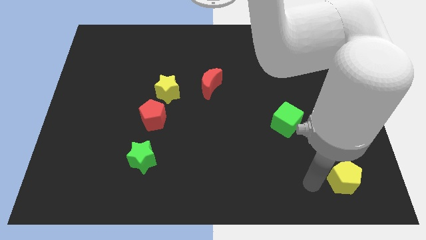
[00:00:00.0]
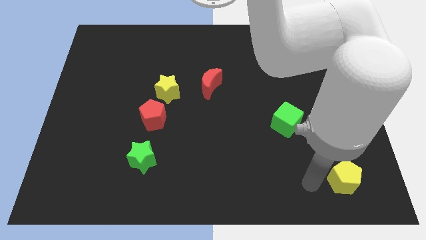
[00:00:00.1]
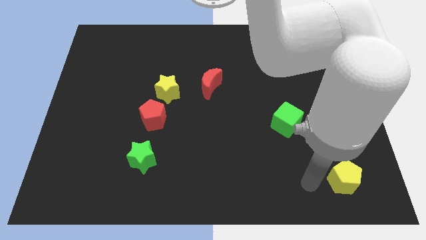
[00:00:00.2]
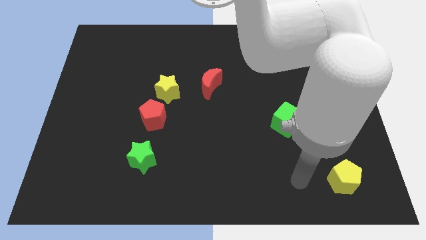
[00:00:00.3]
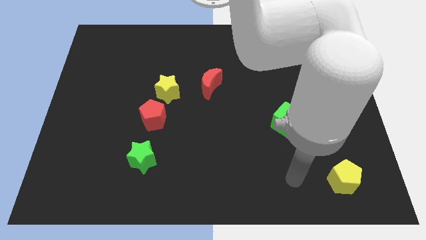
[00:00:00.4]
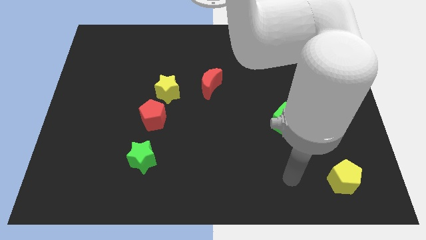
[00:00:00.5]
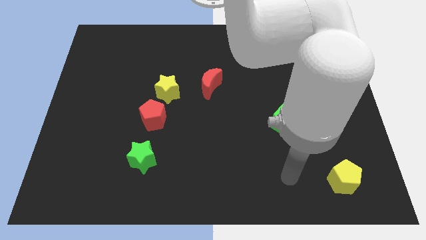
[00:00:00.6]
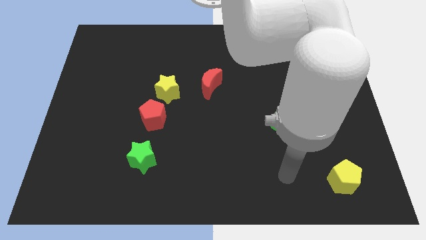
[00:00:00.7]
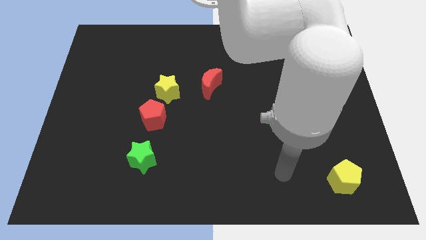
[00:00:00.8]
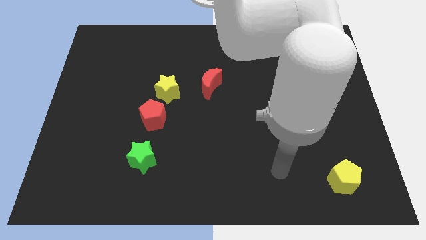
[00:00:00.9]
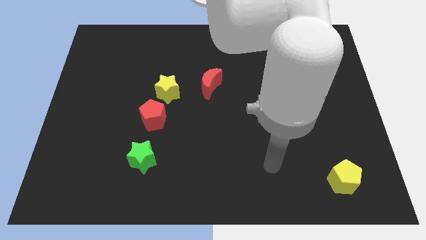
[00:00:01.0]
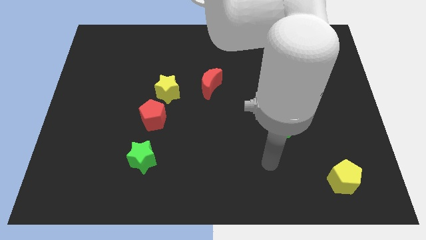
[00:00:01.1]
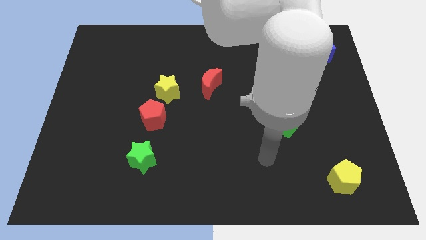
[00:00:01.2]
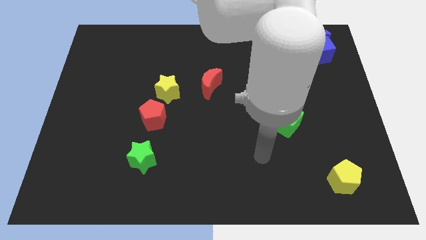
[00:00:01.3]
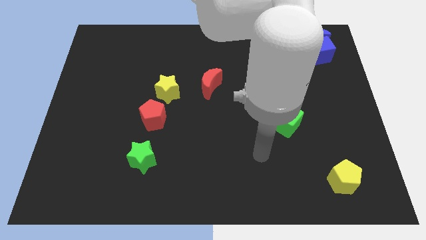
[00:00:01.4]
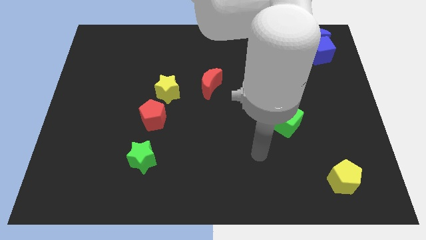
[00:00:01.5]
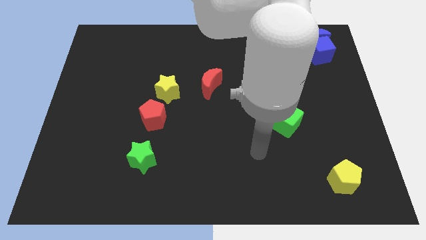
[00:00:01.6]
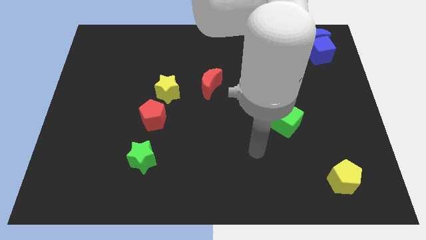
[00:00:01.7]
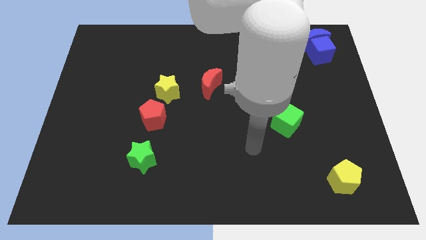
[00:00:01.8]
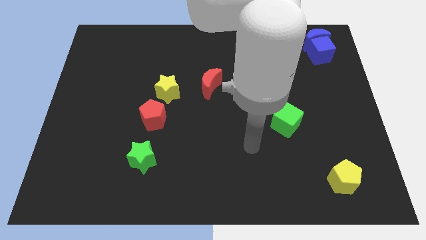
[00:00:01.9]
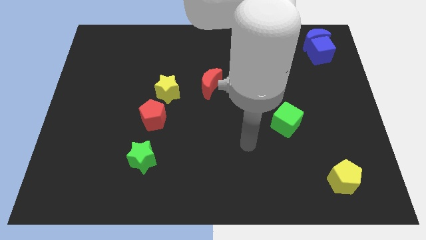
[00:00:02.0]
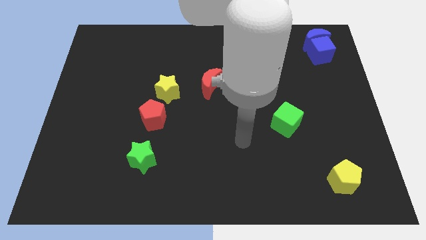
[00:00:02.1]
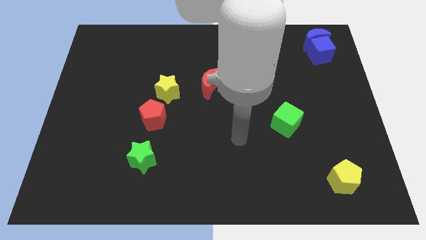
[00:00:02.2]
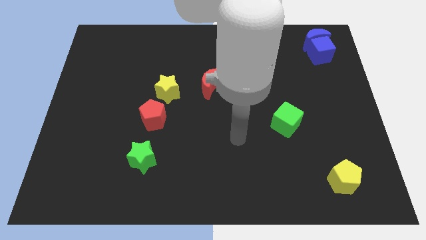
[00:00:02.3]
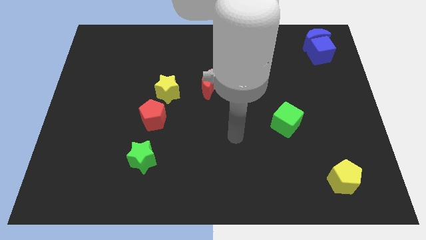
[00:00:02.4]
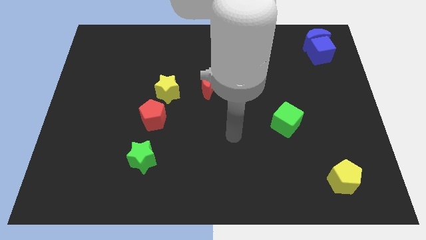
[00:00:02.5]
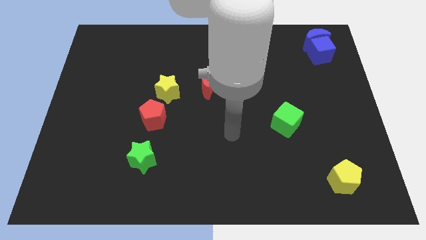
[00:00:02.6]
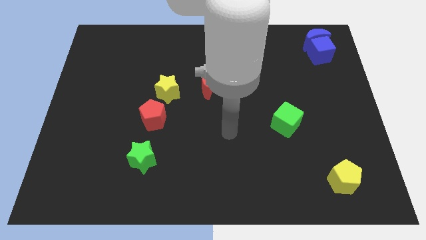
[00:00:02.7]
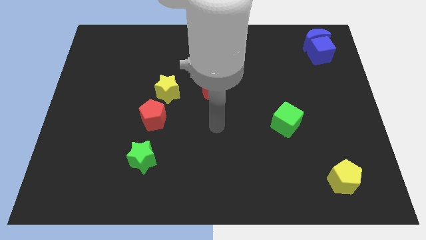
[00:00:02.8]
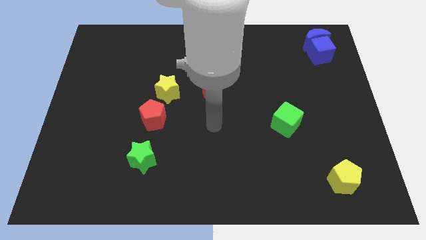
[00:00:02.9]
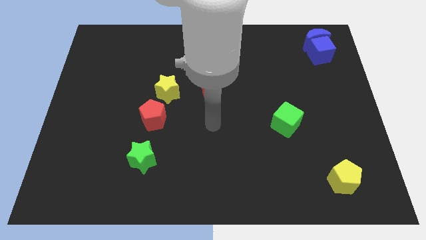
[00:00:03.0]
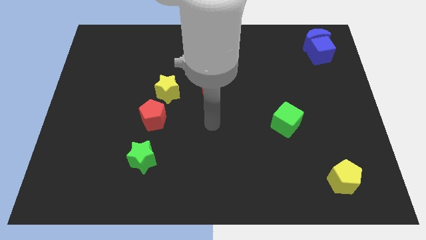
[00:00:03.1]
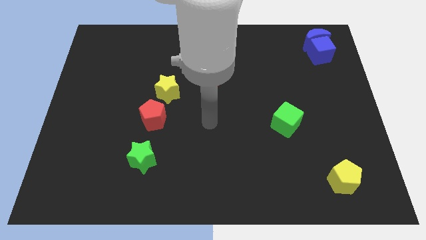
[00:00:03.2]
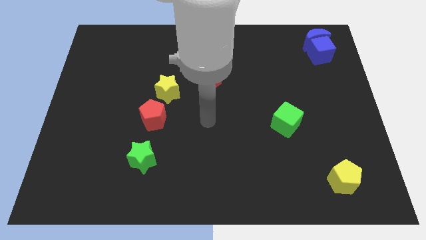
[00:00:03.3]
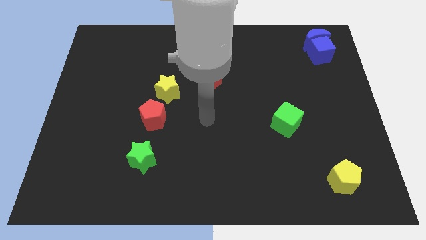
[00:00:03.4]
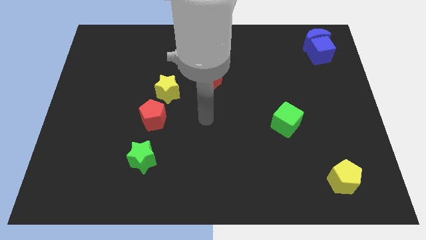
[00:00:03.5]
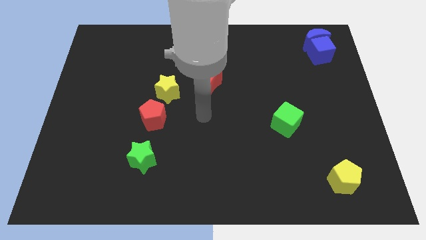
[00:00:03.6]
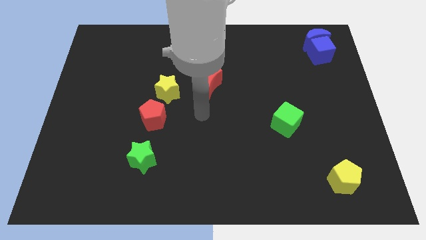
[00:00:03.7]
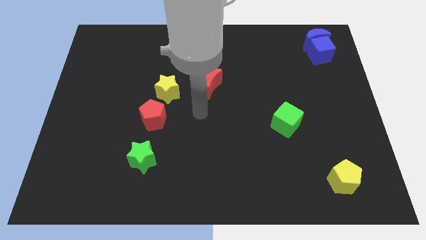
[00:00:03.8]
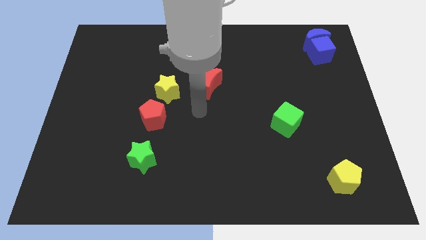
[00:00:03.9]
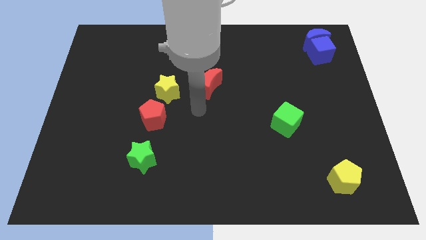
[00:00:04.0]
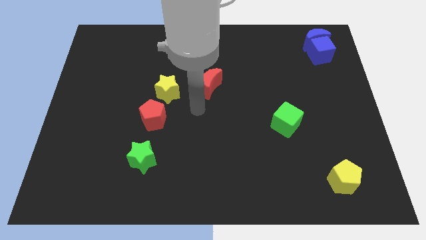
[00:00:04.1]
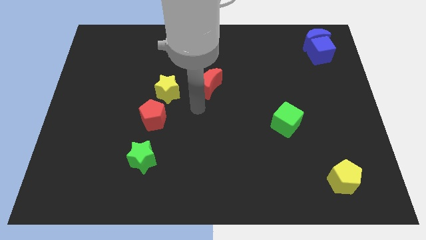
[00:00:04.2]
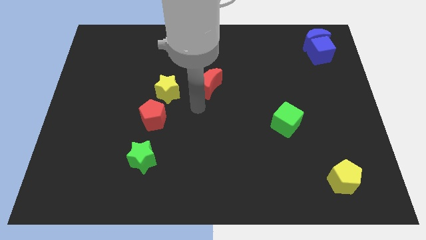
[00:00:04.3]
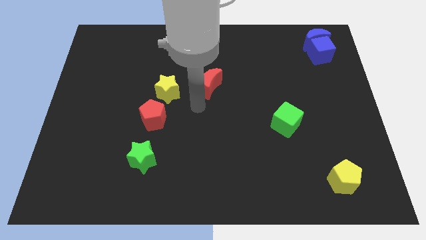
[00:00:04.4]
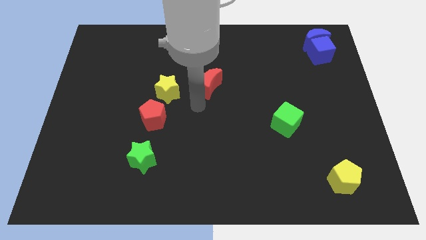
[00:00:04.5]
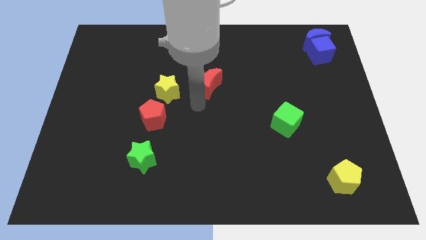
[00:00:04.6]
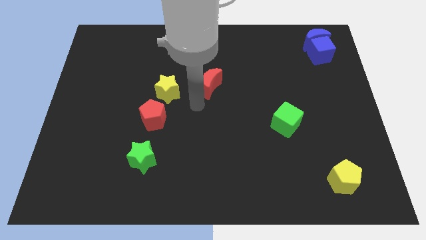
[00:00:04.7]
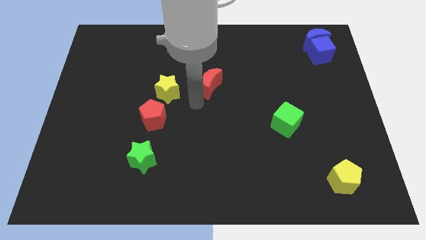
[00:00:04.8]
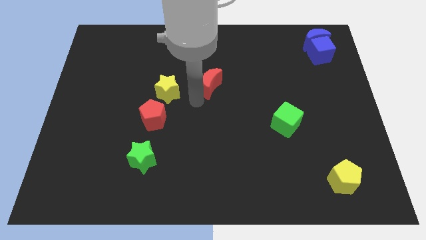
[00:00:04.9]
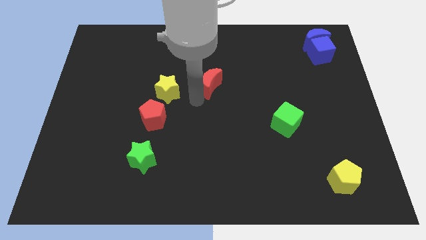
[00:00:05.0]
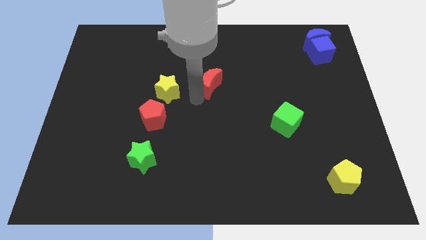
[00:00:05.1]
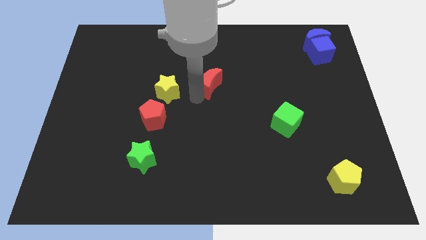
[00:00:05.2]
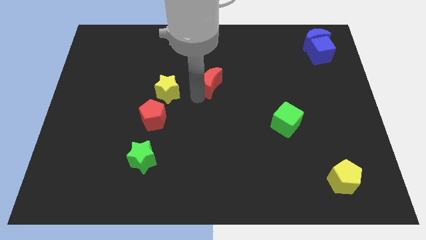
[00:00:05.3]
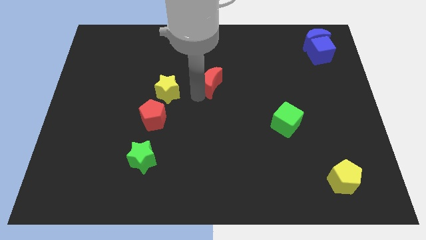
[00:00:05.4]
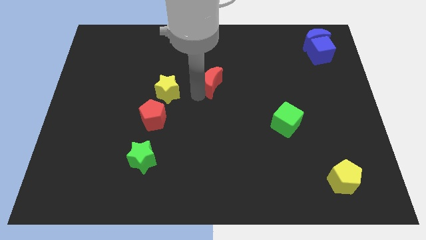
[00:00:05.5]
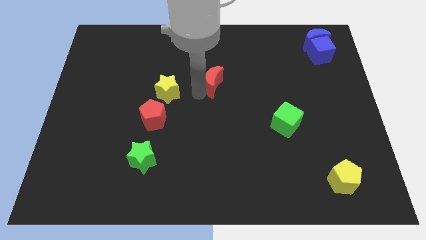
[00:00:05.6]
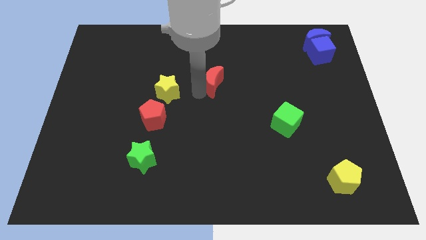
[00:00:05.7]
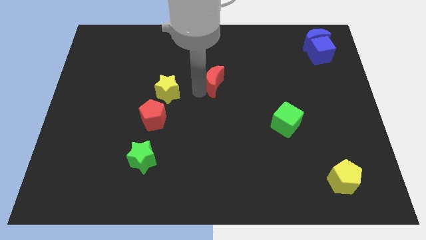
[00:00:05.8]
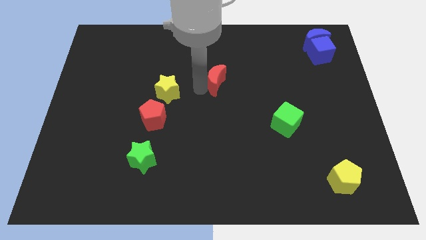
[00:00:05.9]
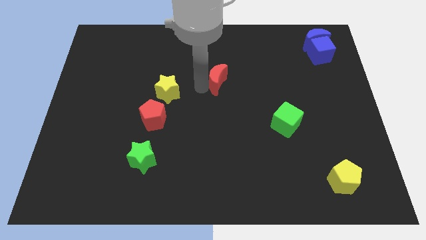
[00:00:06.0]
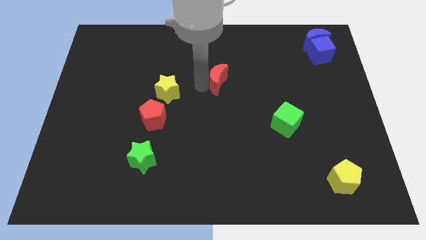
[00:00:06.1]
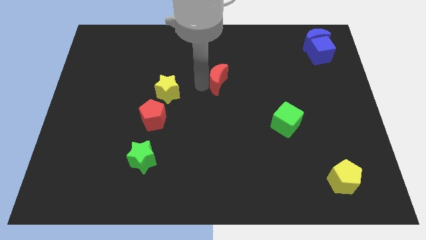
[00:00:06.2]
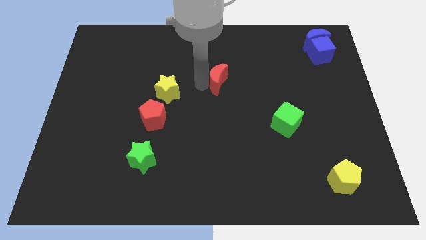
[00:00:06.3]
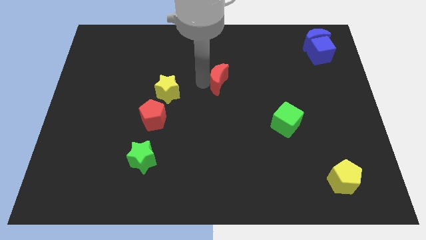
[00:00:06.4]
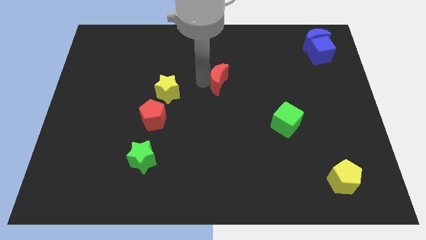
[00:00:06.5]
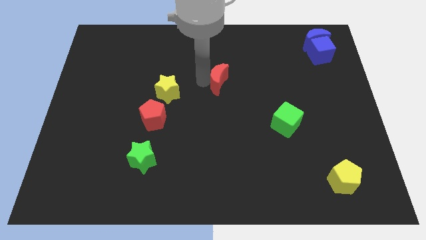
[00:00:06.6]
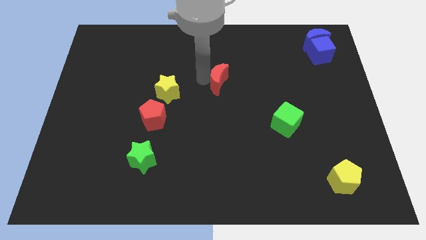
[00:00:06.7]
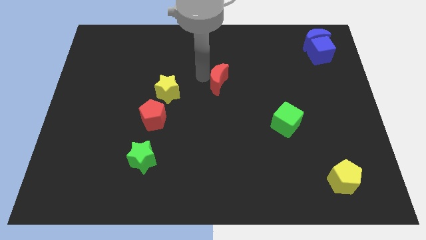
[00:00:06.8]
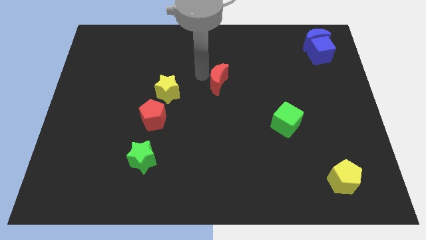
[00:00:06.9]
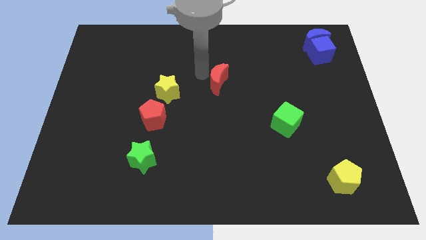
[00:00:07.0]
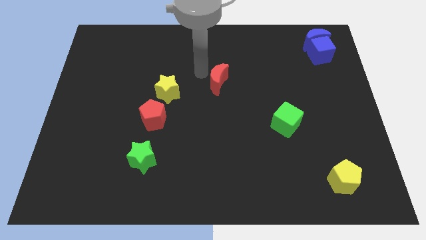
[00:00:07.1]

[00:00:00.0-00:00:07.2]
slightly push the red crescent to the right of the board

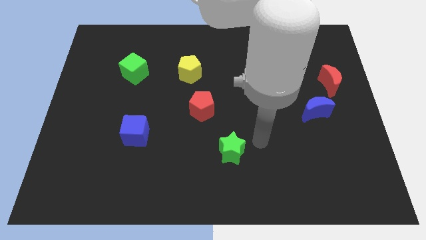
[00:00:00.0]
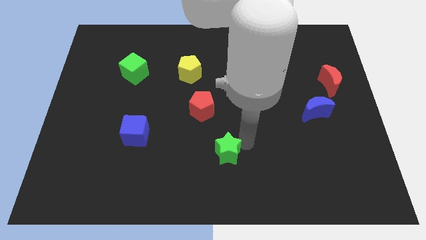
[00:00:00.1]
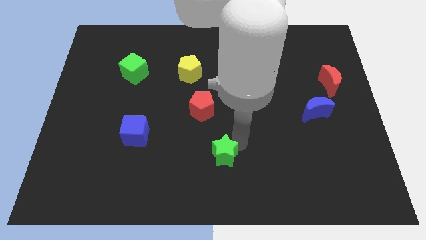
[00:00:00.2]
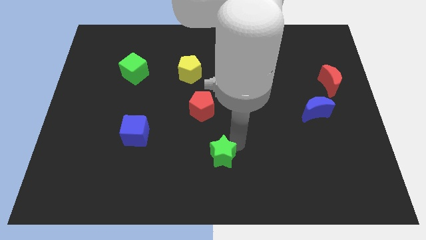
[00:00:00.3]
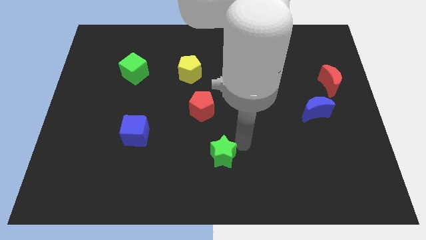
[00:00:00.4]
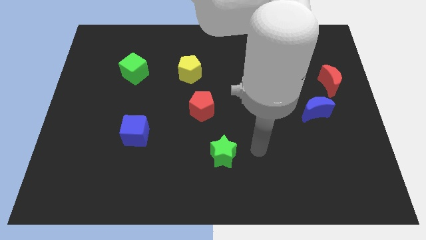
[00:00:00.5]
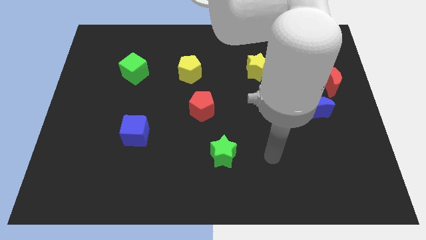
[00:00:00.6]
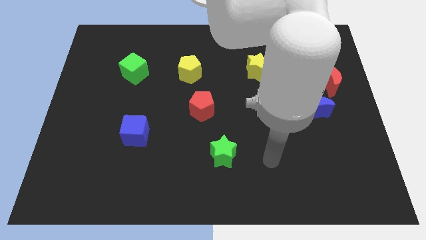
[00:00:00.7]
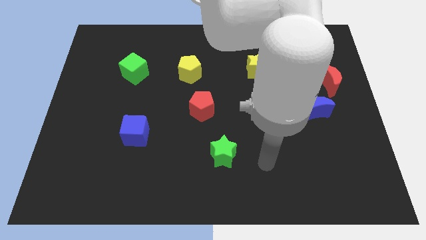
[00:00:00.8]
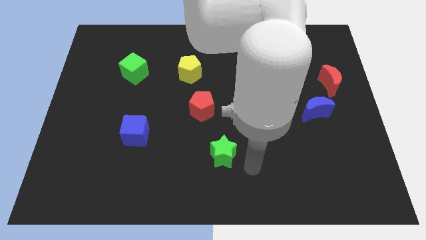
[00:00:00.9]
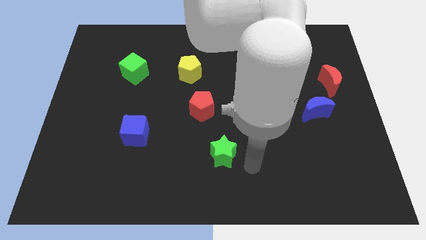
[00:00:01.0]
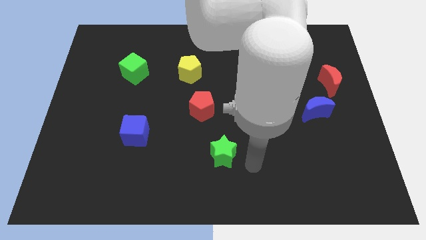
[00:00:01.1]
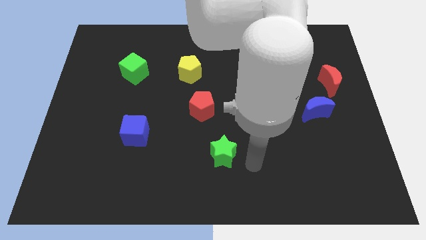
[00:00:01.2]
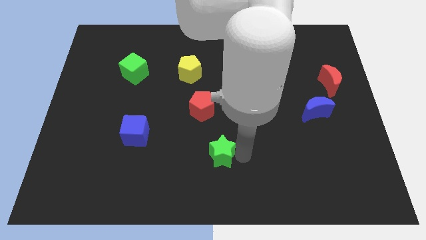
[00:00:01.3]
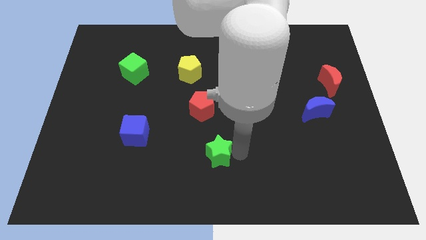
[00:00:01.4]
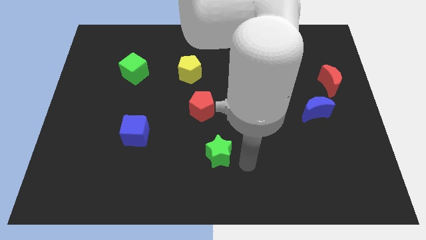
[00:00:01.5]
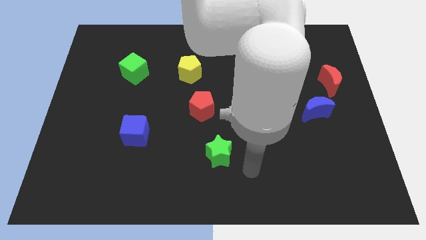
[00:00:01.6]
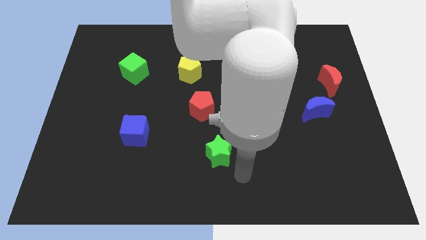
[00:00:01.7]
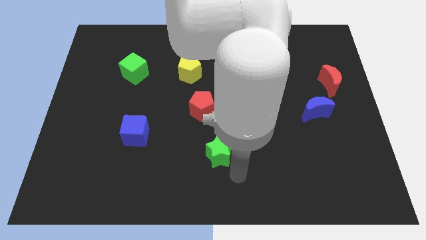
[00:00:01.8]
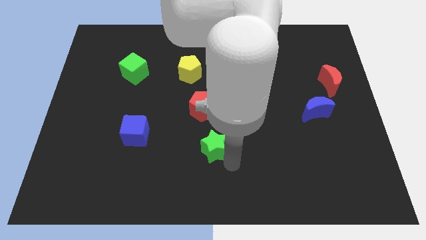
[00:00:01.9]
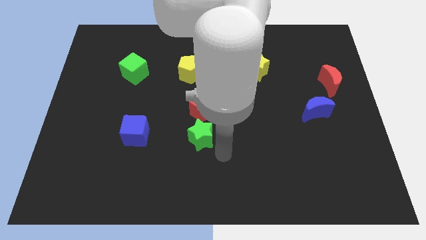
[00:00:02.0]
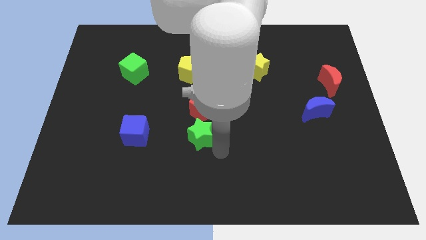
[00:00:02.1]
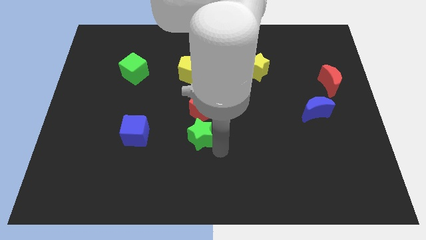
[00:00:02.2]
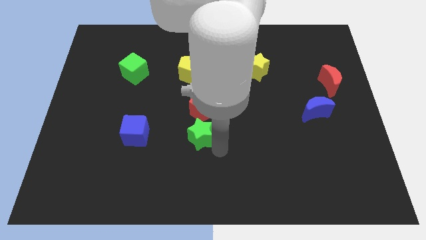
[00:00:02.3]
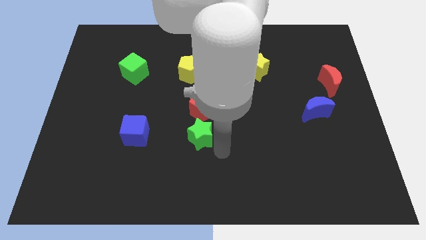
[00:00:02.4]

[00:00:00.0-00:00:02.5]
move the green star into the red crescent
